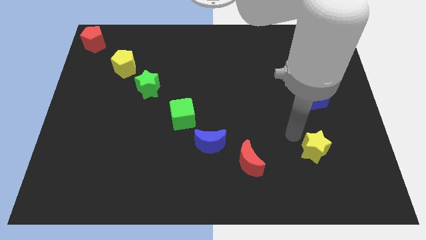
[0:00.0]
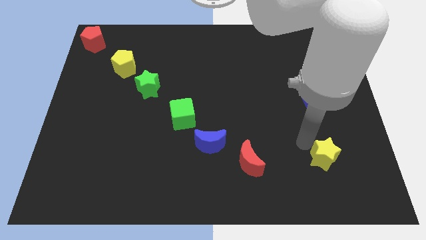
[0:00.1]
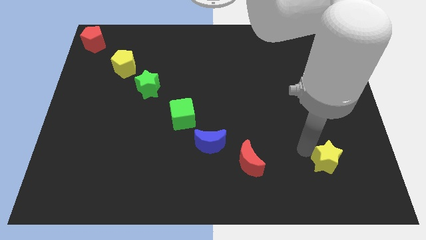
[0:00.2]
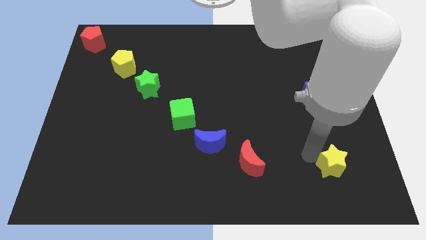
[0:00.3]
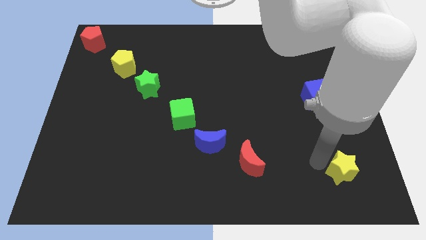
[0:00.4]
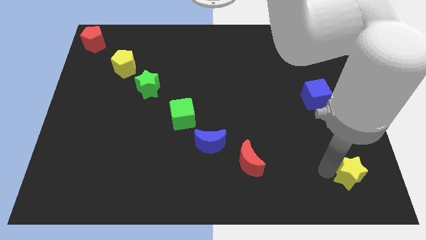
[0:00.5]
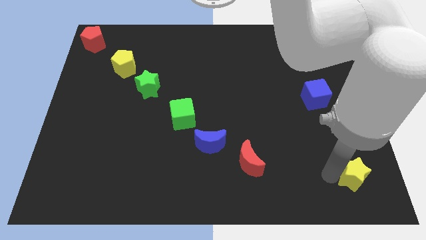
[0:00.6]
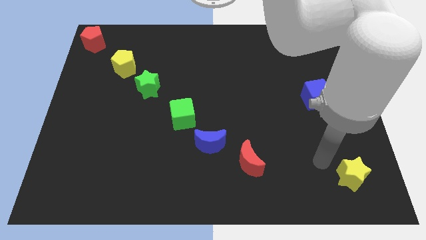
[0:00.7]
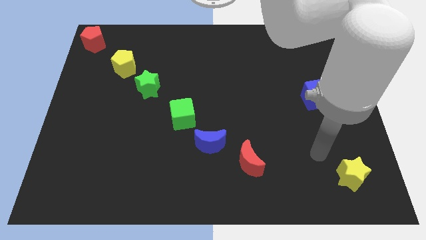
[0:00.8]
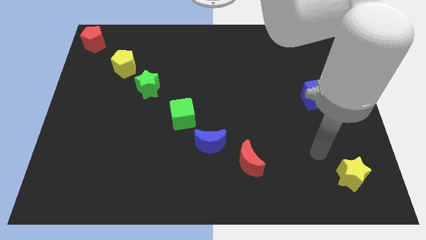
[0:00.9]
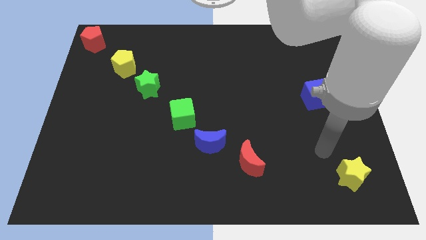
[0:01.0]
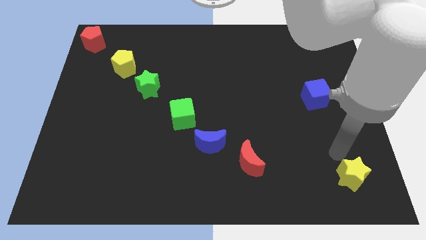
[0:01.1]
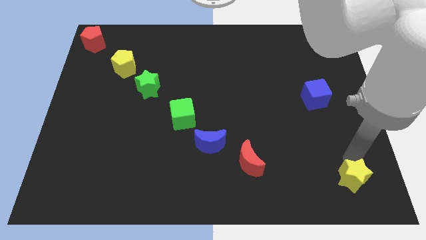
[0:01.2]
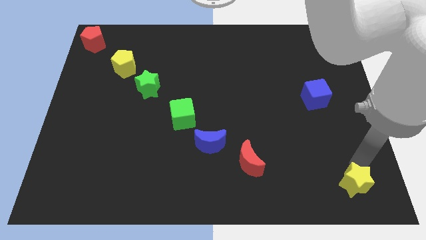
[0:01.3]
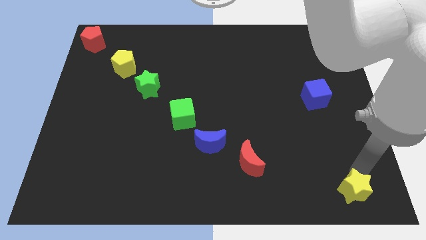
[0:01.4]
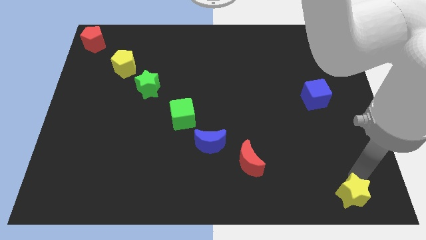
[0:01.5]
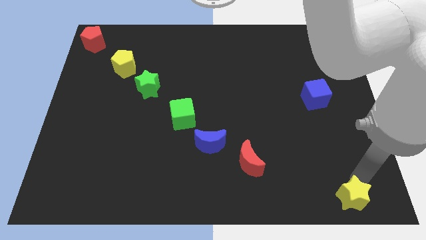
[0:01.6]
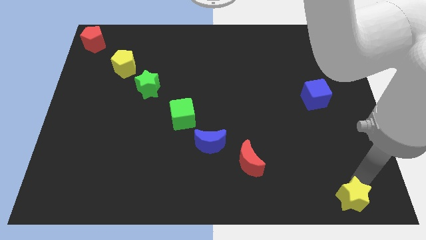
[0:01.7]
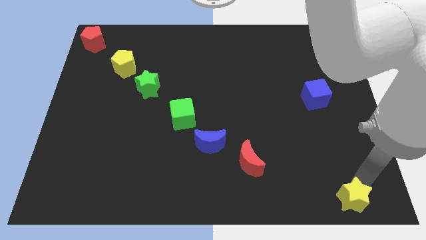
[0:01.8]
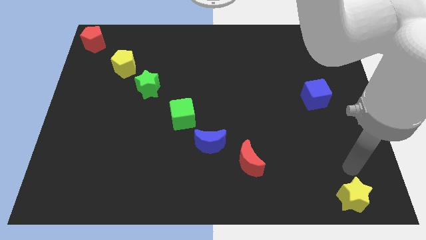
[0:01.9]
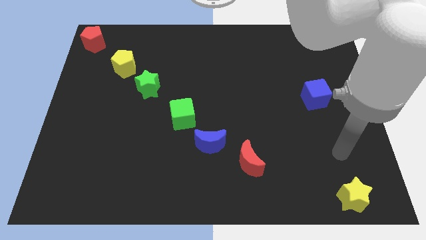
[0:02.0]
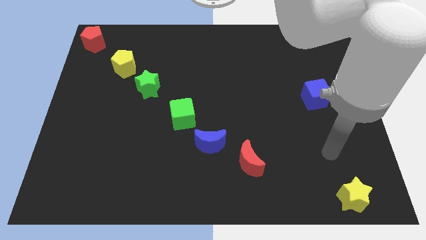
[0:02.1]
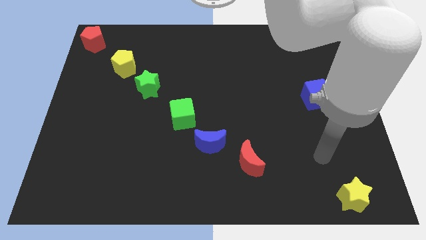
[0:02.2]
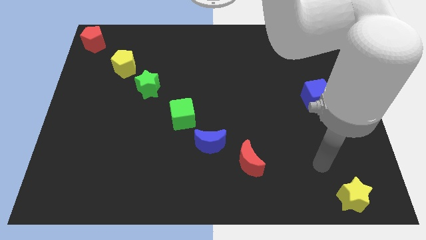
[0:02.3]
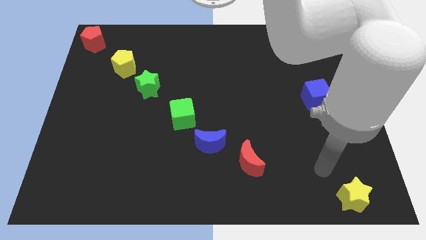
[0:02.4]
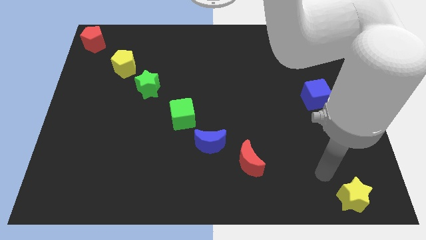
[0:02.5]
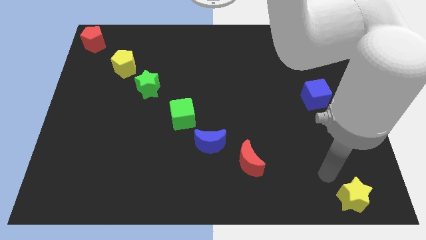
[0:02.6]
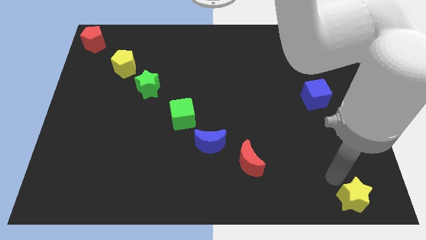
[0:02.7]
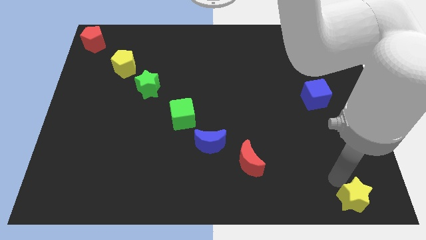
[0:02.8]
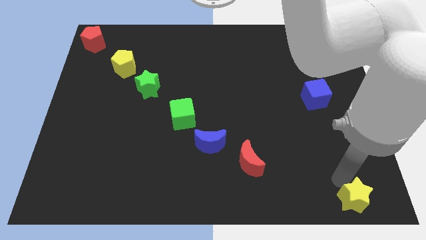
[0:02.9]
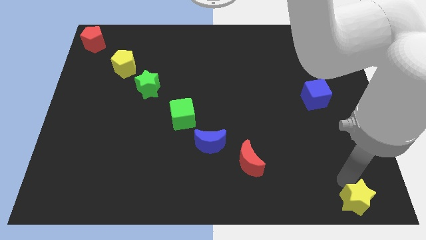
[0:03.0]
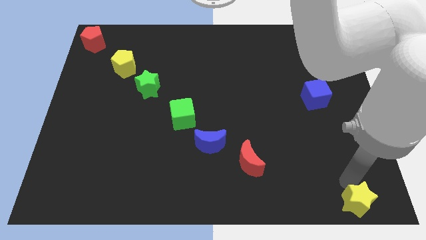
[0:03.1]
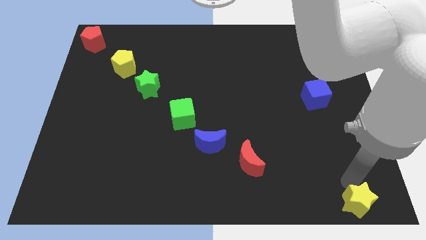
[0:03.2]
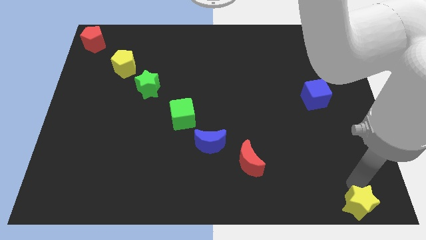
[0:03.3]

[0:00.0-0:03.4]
move the yellow star to the bottom right of the red crescent

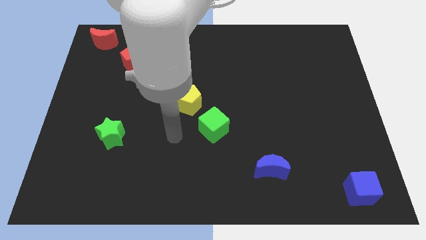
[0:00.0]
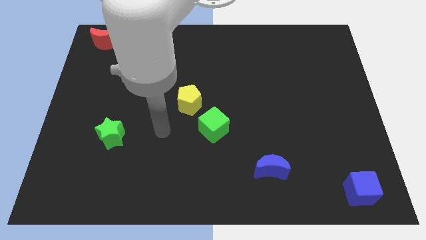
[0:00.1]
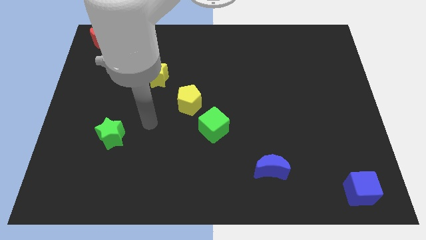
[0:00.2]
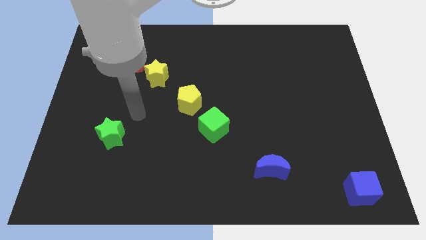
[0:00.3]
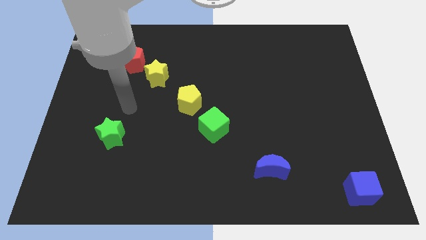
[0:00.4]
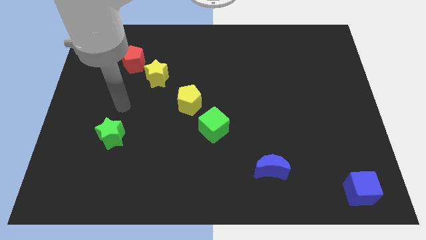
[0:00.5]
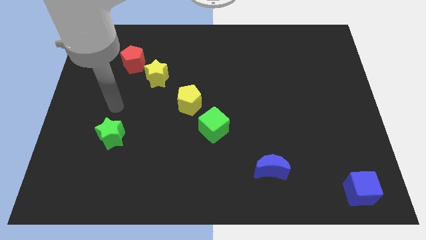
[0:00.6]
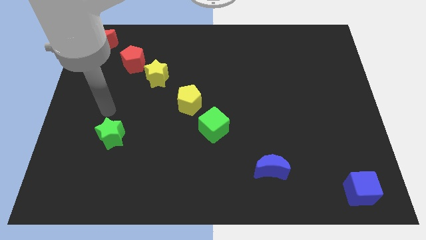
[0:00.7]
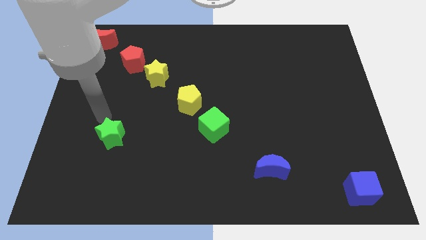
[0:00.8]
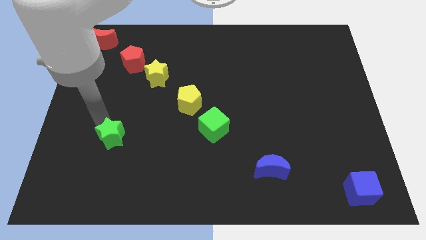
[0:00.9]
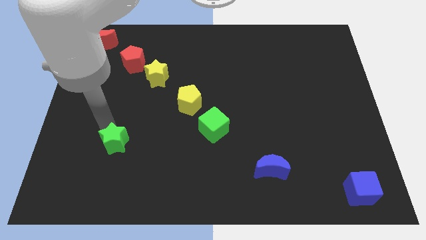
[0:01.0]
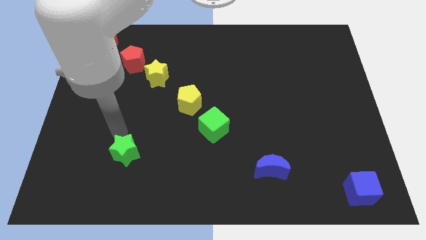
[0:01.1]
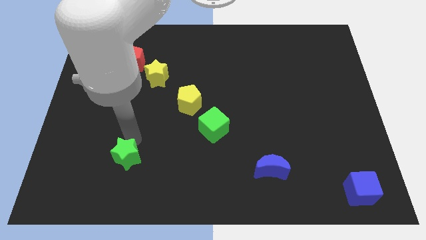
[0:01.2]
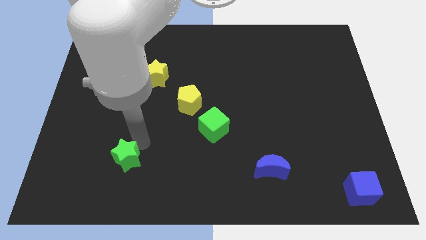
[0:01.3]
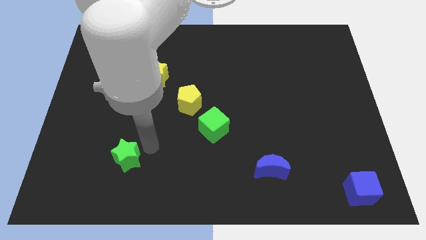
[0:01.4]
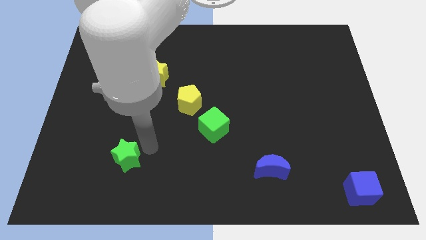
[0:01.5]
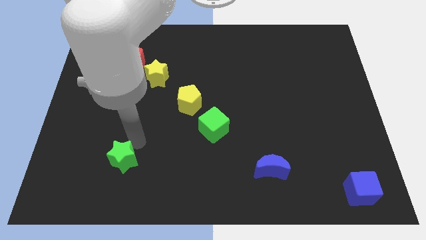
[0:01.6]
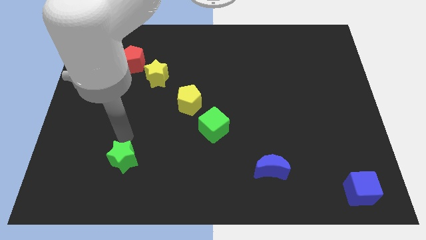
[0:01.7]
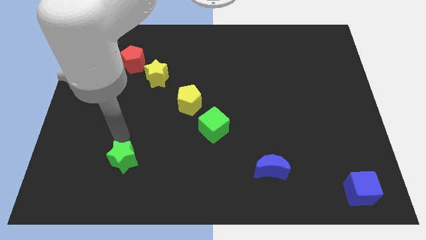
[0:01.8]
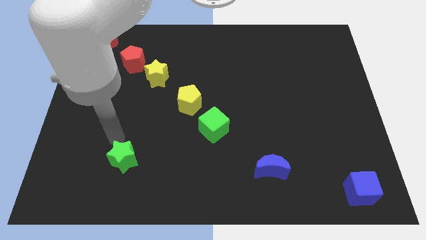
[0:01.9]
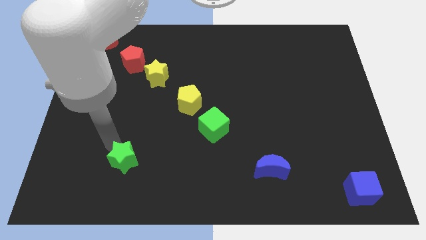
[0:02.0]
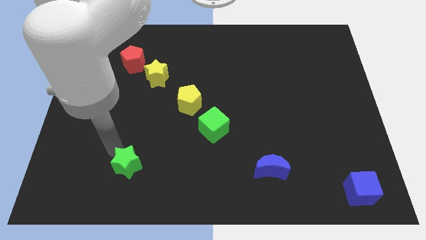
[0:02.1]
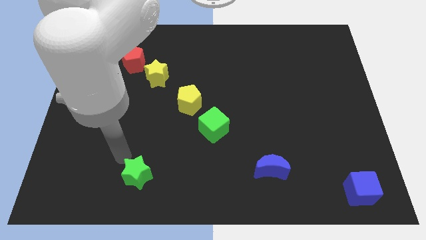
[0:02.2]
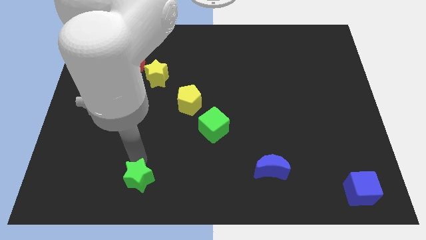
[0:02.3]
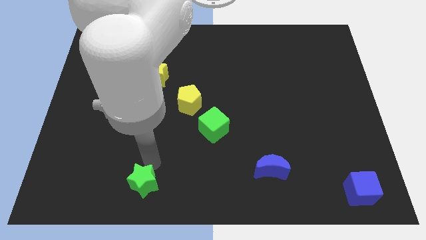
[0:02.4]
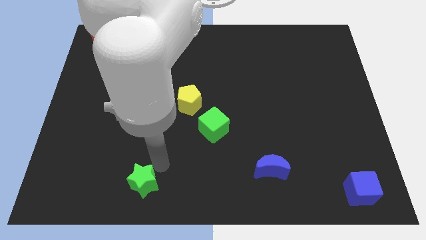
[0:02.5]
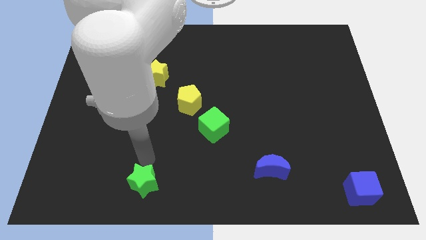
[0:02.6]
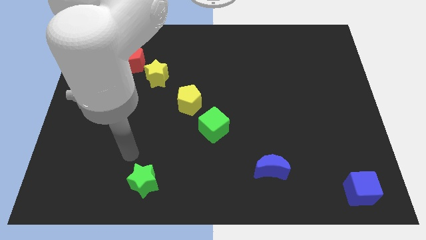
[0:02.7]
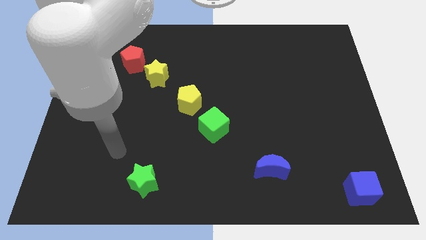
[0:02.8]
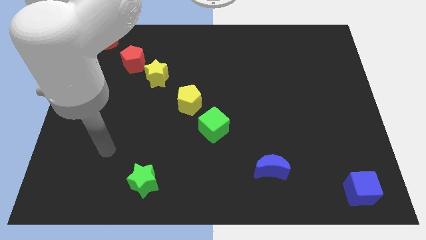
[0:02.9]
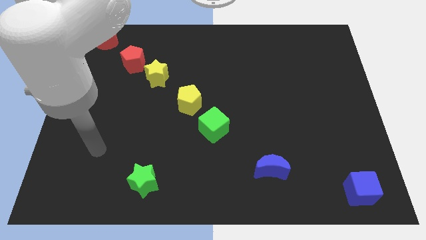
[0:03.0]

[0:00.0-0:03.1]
move the green star to the bottom left of the green cube

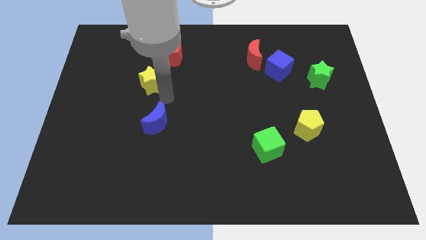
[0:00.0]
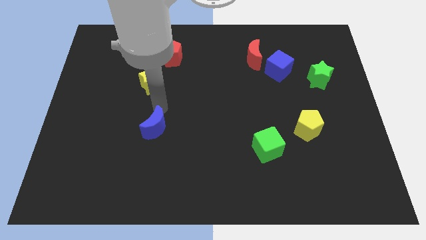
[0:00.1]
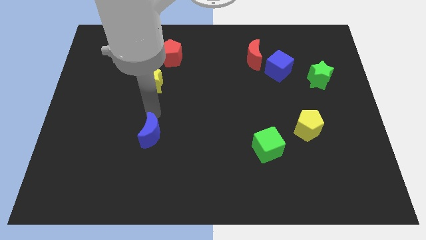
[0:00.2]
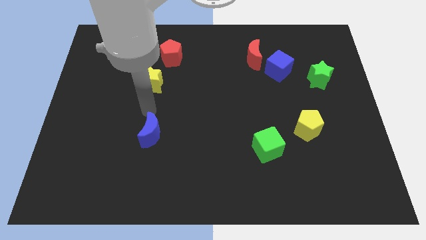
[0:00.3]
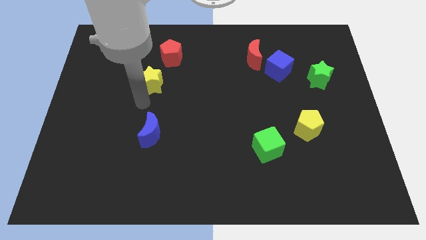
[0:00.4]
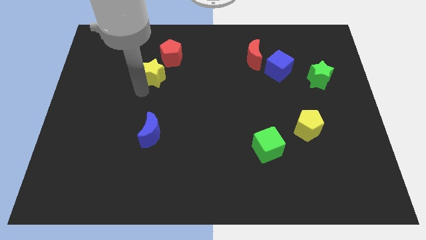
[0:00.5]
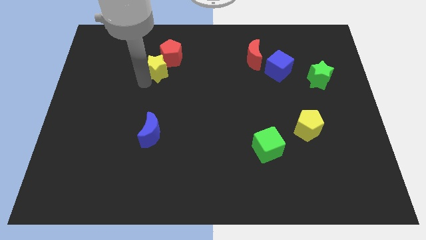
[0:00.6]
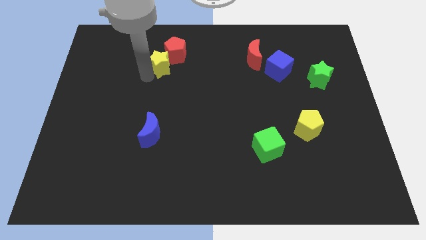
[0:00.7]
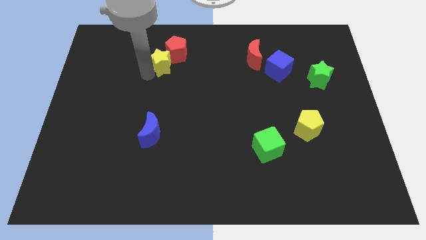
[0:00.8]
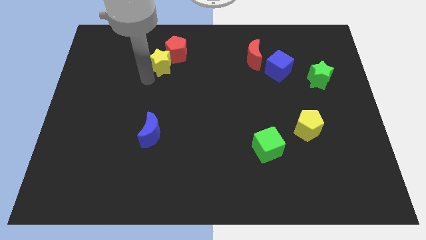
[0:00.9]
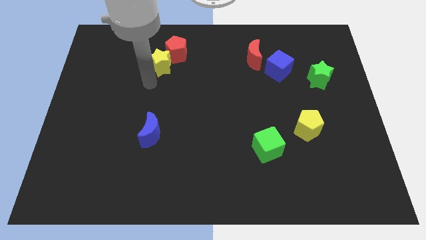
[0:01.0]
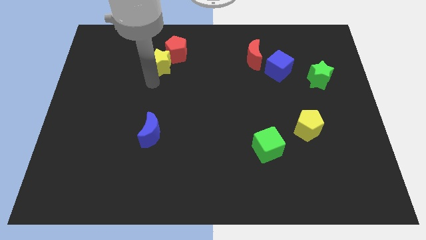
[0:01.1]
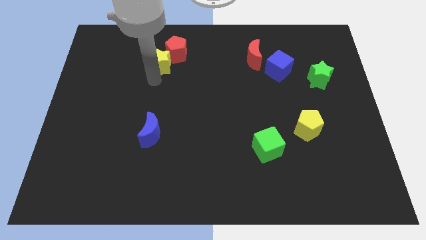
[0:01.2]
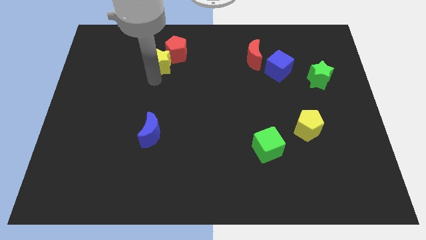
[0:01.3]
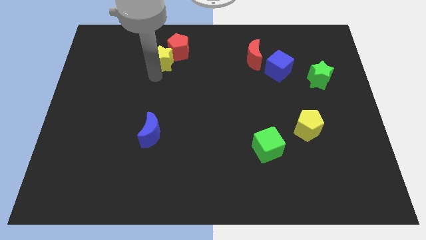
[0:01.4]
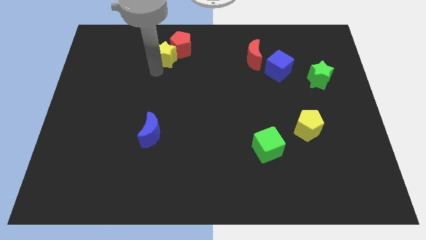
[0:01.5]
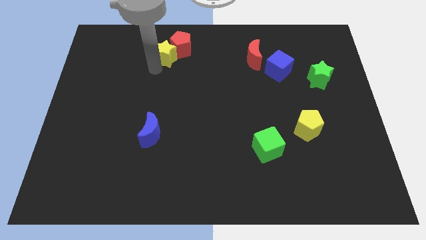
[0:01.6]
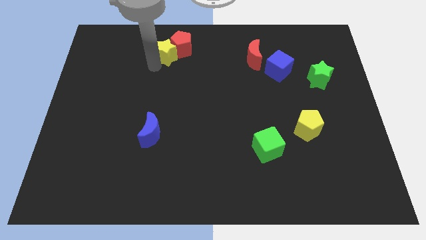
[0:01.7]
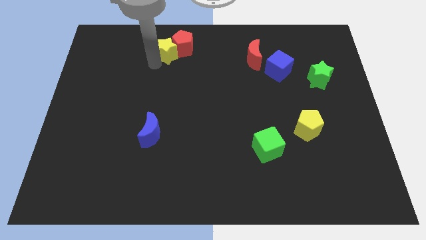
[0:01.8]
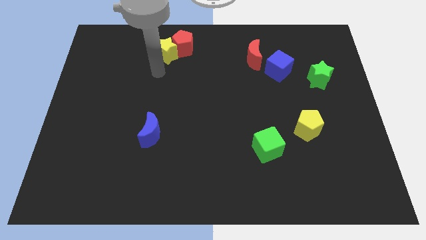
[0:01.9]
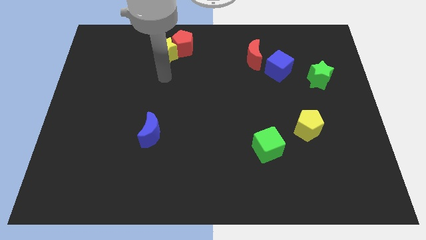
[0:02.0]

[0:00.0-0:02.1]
push the yellow star into the red pentagon

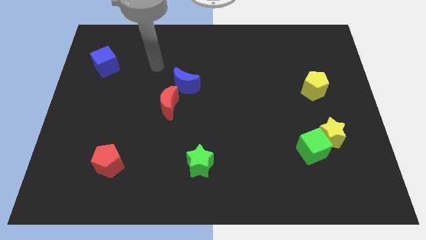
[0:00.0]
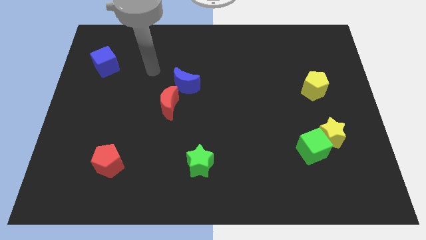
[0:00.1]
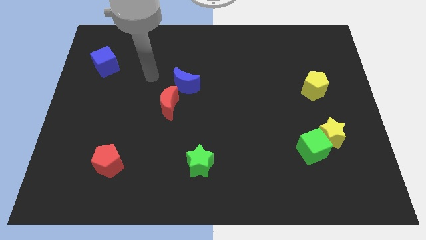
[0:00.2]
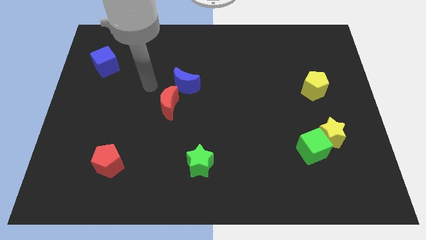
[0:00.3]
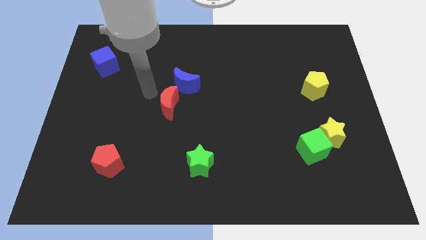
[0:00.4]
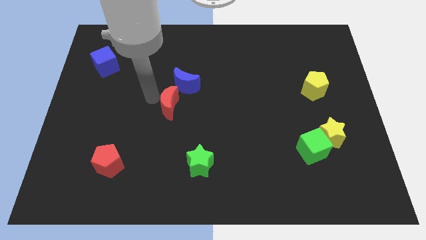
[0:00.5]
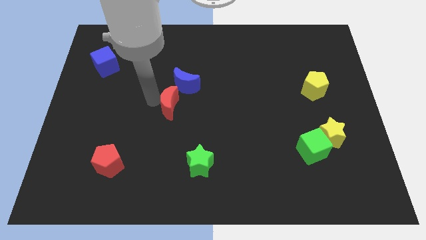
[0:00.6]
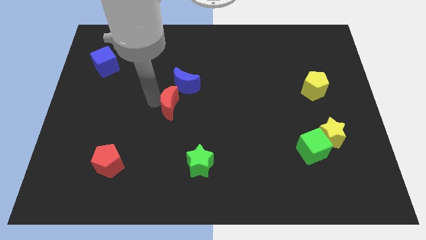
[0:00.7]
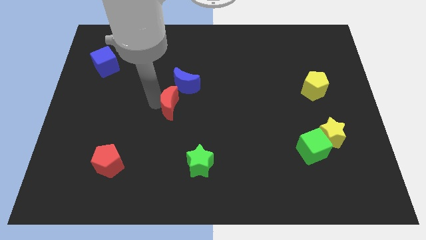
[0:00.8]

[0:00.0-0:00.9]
move your arm to the left of the red crescent
